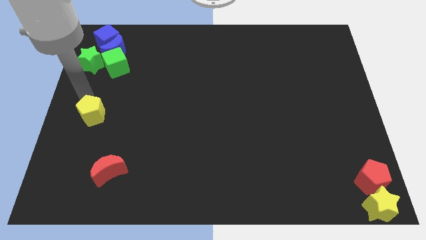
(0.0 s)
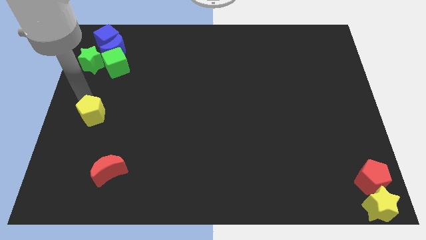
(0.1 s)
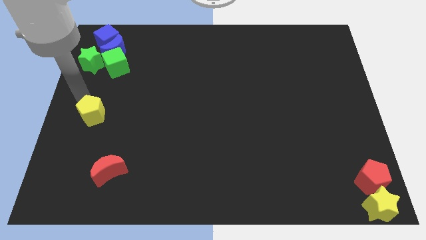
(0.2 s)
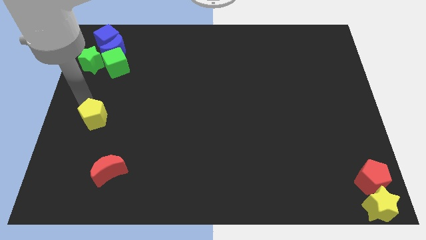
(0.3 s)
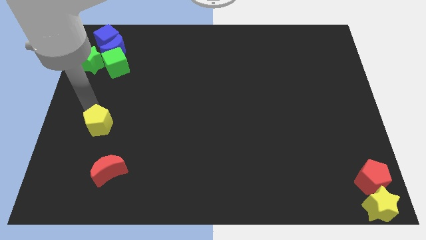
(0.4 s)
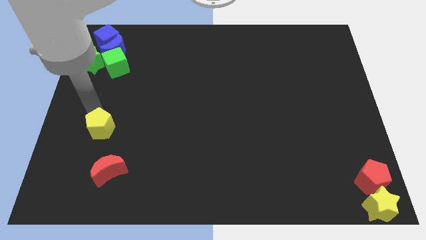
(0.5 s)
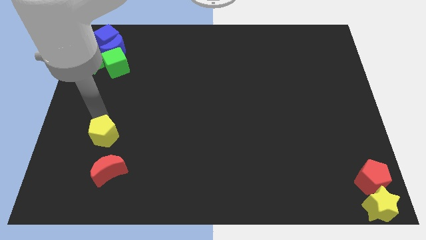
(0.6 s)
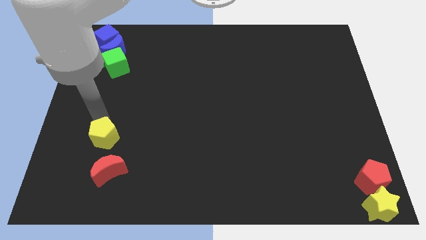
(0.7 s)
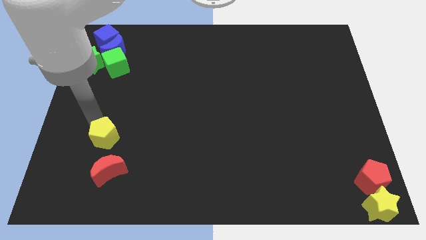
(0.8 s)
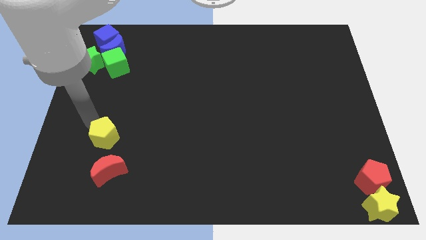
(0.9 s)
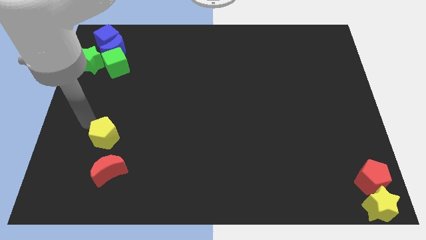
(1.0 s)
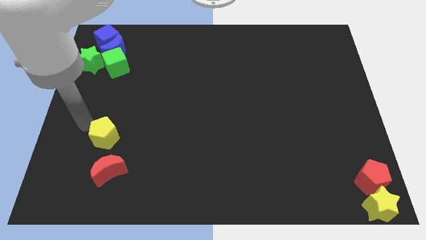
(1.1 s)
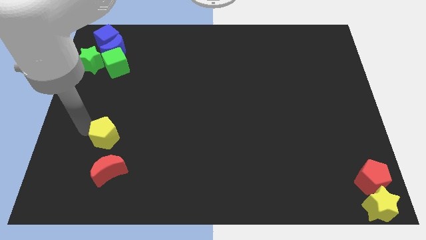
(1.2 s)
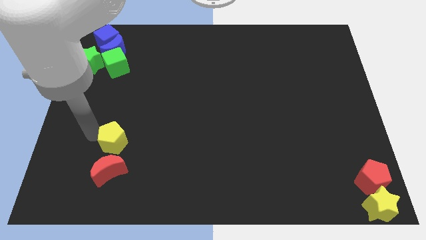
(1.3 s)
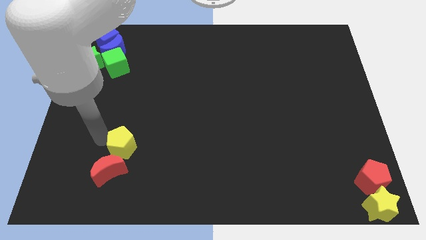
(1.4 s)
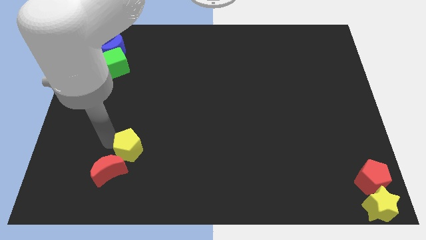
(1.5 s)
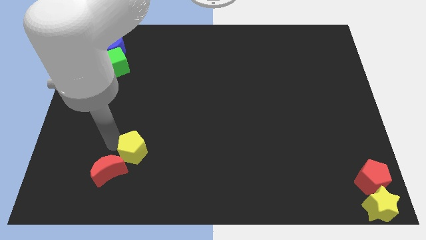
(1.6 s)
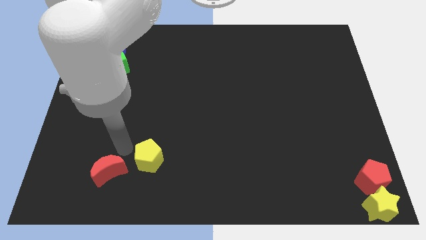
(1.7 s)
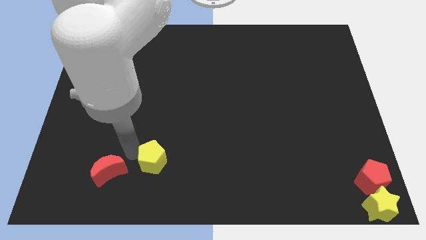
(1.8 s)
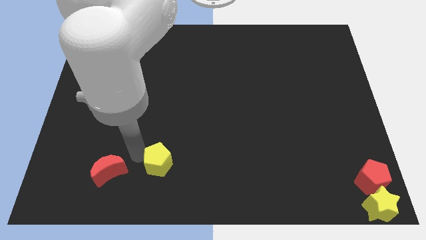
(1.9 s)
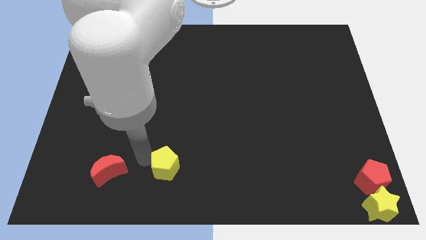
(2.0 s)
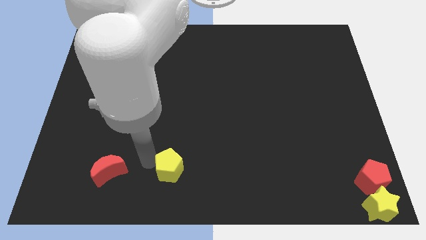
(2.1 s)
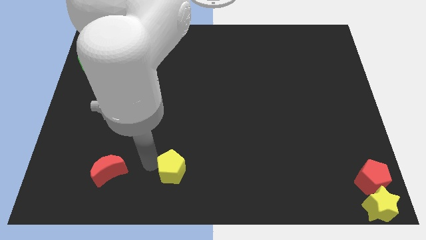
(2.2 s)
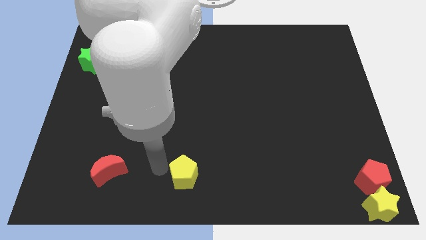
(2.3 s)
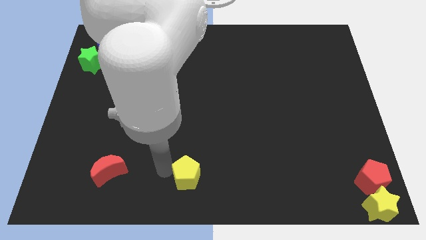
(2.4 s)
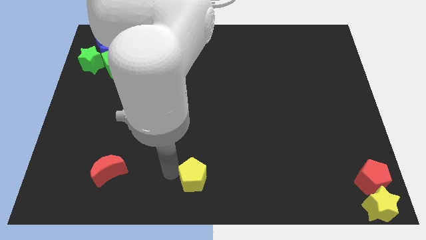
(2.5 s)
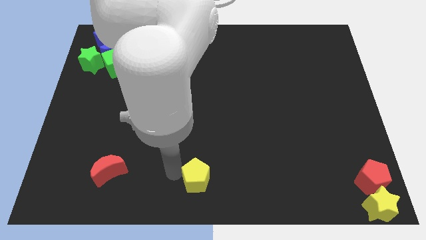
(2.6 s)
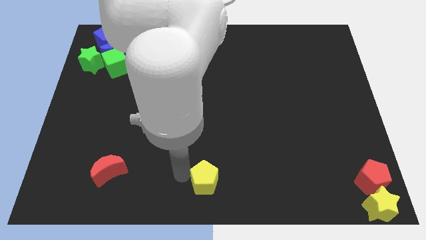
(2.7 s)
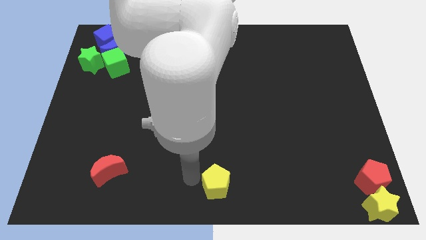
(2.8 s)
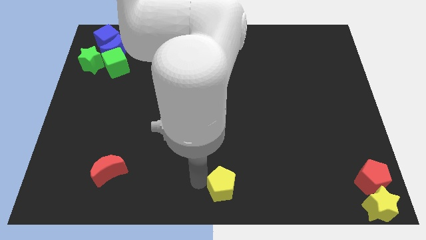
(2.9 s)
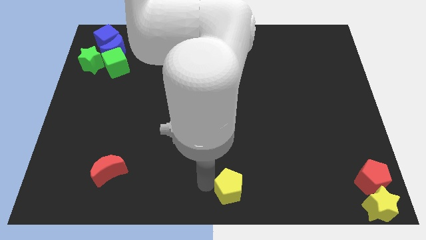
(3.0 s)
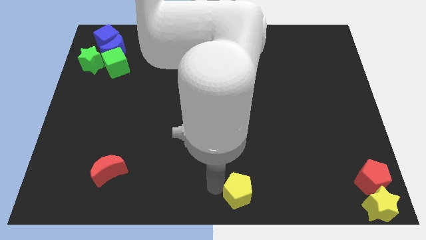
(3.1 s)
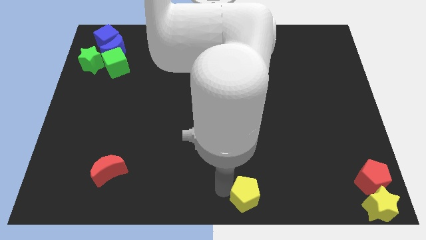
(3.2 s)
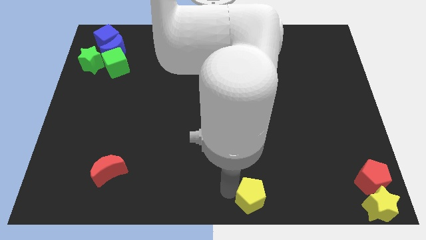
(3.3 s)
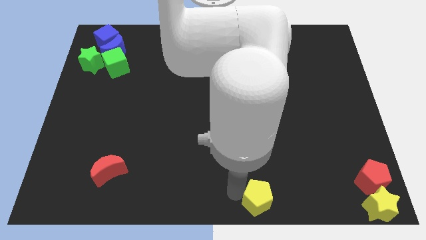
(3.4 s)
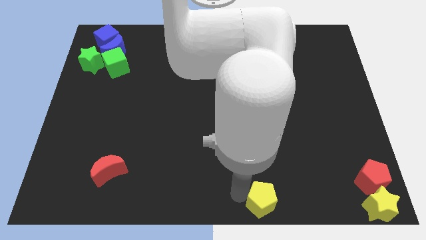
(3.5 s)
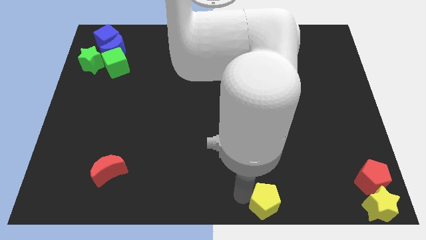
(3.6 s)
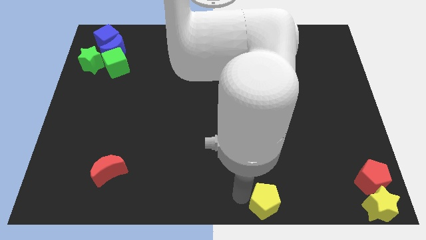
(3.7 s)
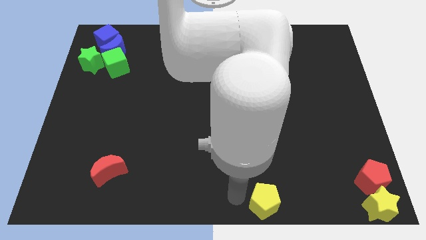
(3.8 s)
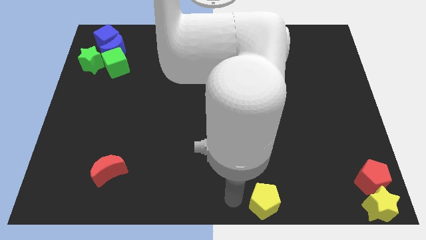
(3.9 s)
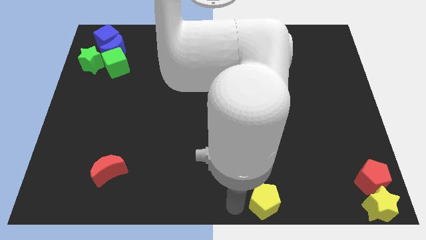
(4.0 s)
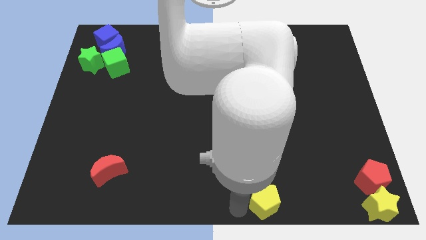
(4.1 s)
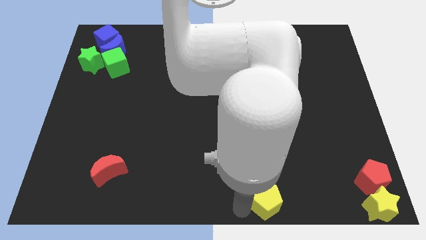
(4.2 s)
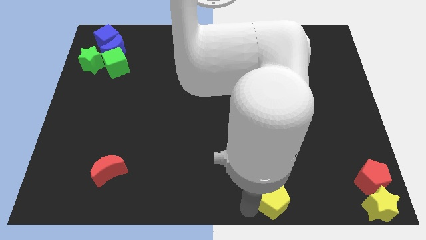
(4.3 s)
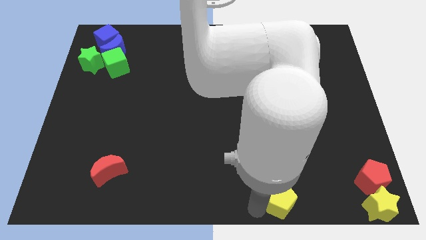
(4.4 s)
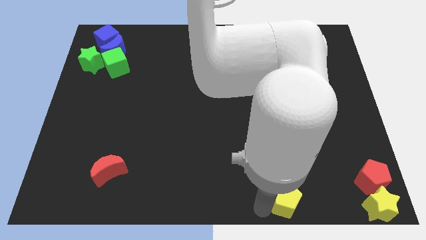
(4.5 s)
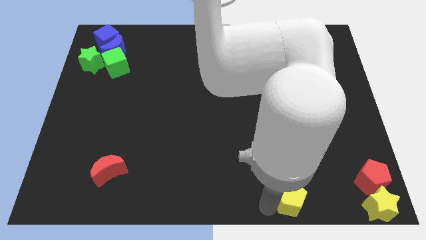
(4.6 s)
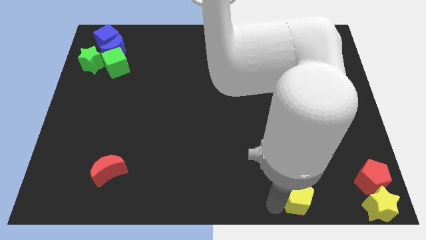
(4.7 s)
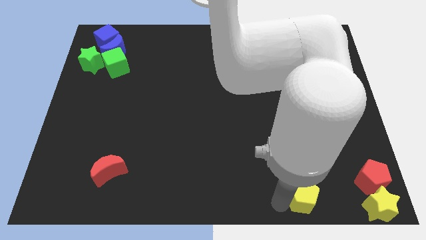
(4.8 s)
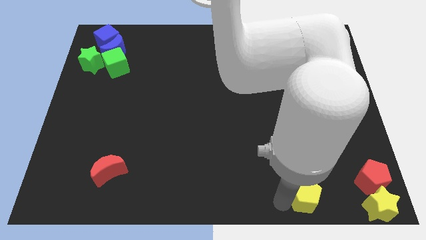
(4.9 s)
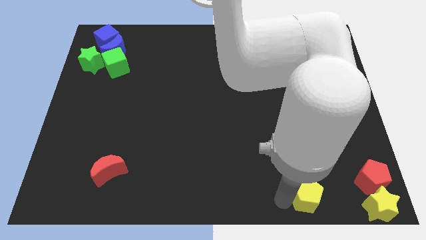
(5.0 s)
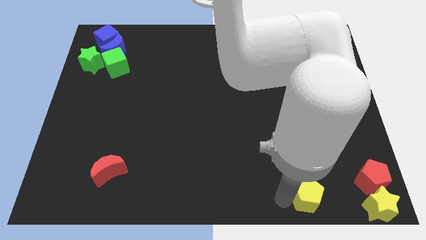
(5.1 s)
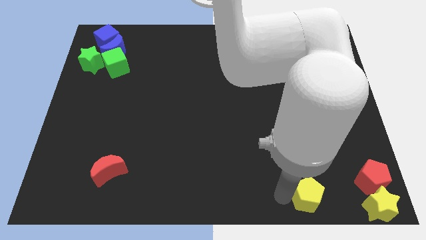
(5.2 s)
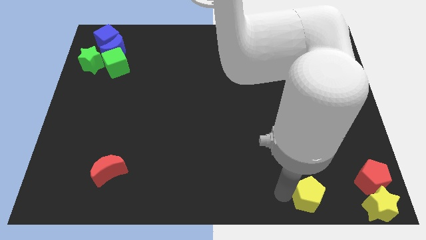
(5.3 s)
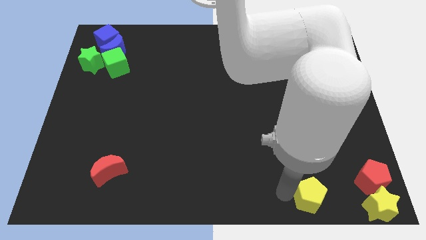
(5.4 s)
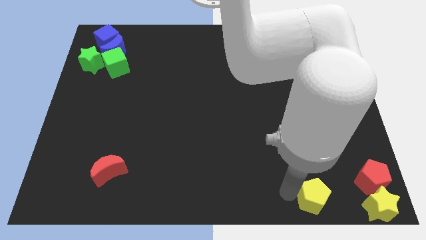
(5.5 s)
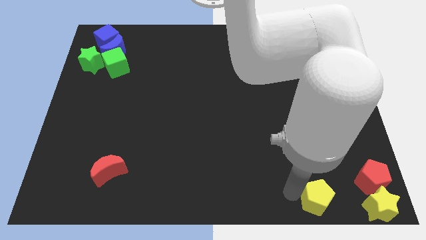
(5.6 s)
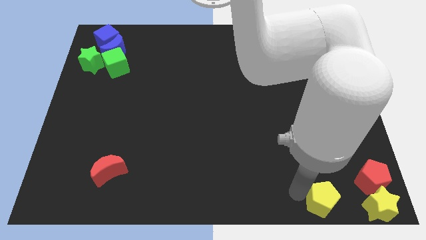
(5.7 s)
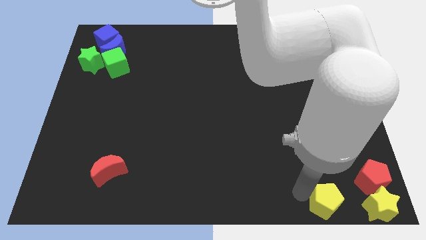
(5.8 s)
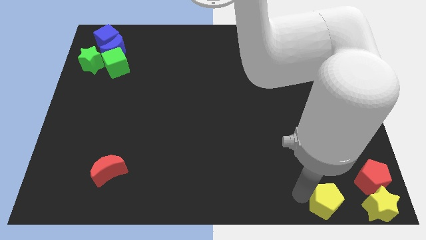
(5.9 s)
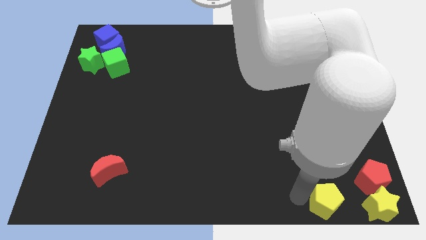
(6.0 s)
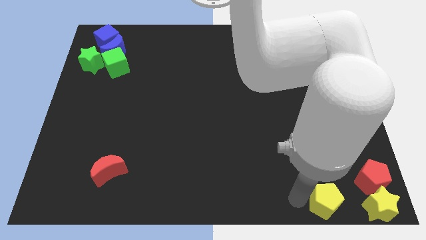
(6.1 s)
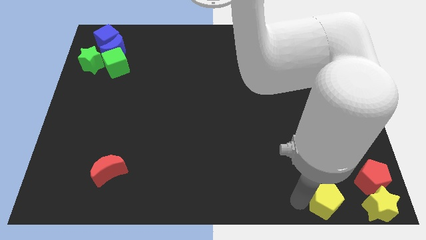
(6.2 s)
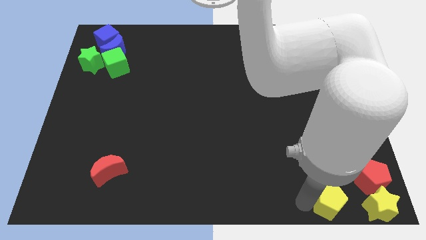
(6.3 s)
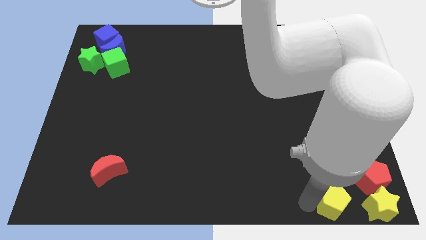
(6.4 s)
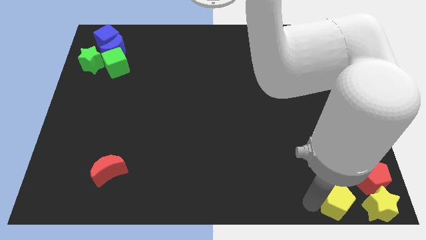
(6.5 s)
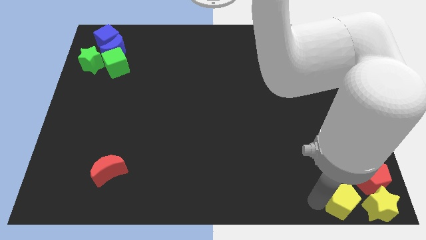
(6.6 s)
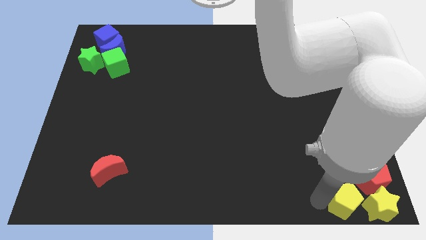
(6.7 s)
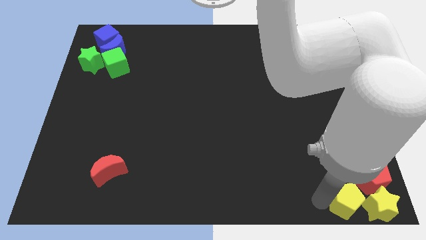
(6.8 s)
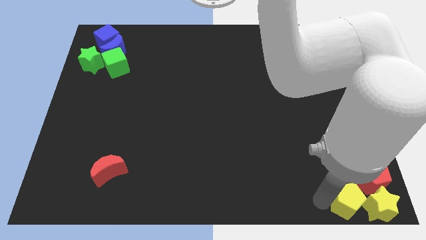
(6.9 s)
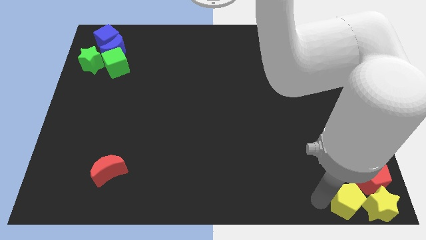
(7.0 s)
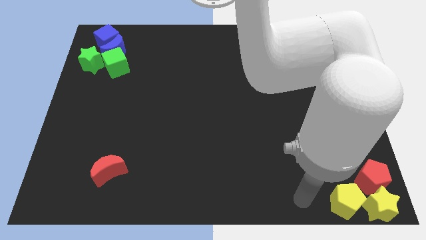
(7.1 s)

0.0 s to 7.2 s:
move the yellow pentagon into the yellow star and red pentagon

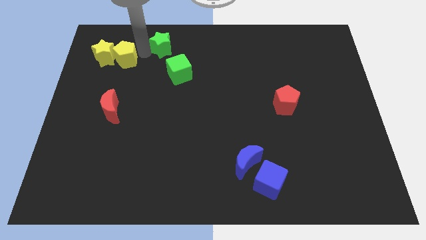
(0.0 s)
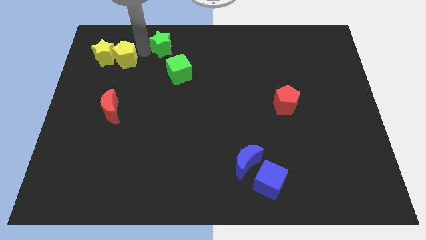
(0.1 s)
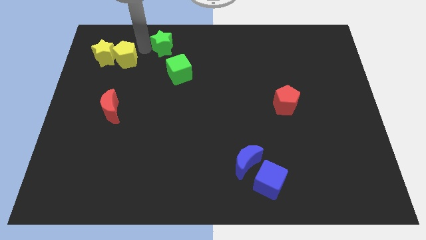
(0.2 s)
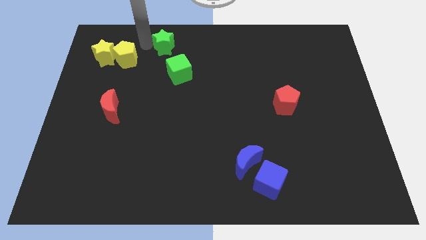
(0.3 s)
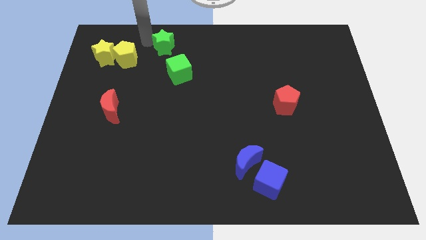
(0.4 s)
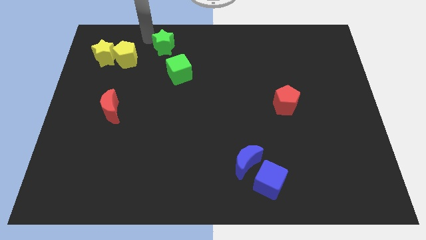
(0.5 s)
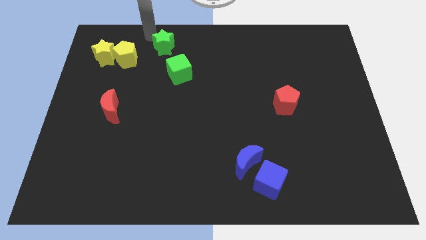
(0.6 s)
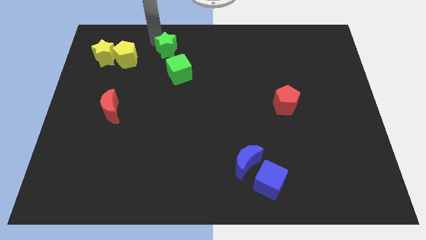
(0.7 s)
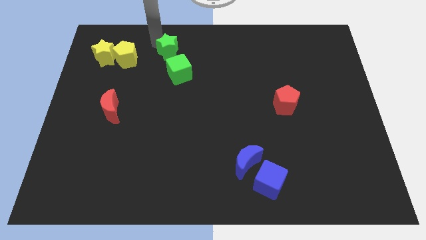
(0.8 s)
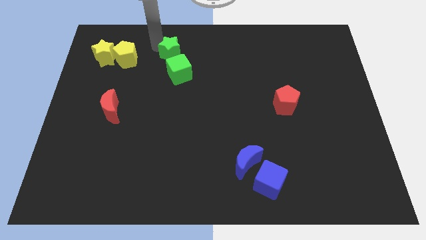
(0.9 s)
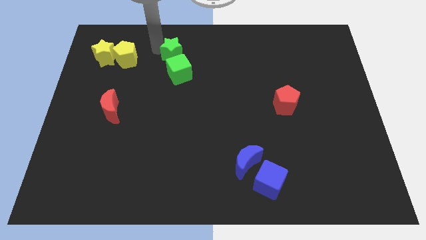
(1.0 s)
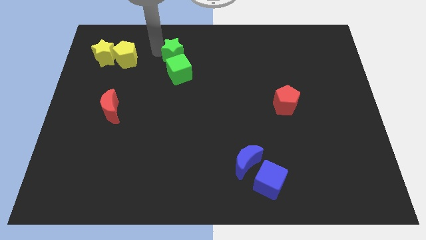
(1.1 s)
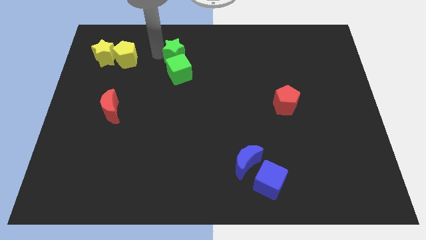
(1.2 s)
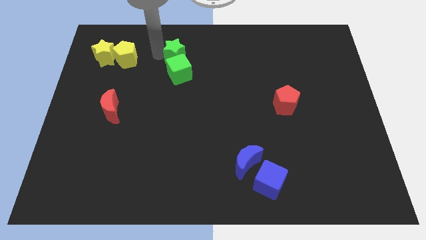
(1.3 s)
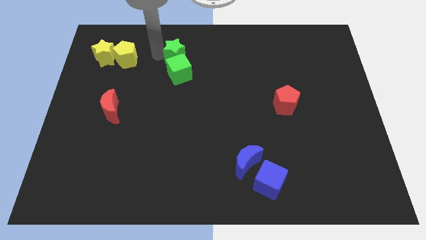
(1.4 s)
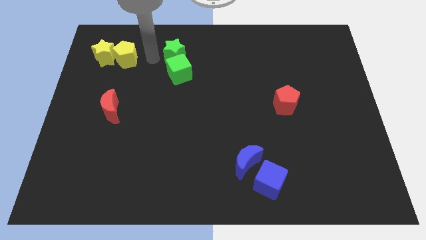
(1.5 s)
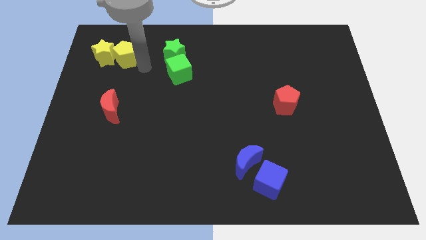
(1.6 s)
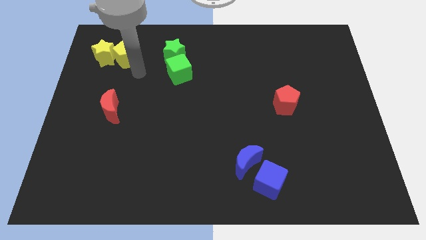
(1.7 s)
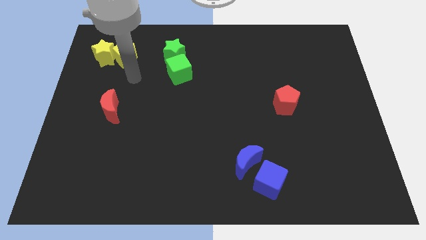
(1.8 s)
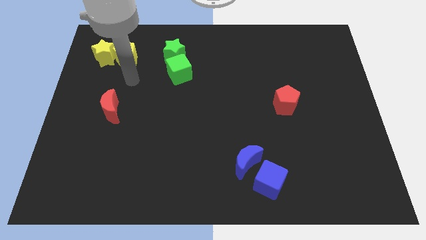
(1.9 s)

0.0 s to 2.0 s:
push the green star towards the top of the green cube
